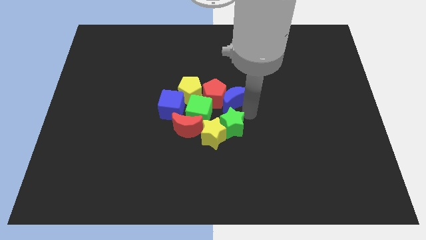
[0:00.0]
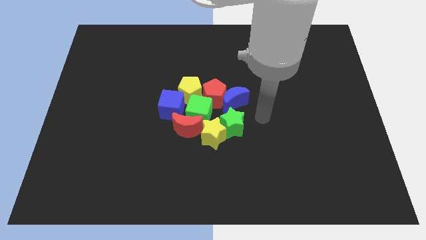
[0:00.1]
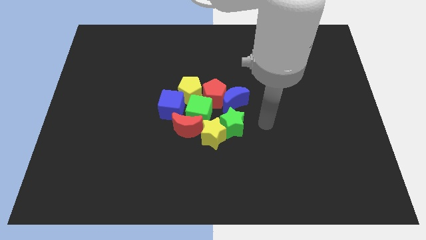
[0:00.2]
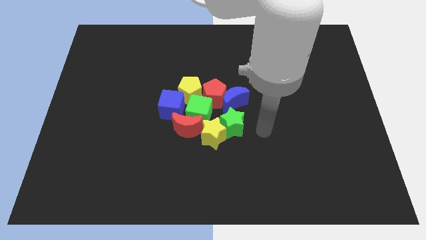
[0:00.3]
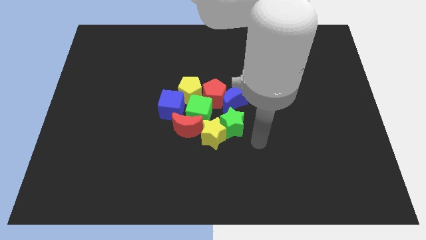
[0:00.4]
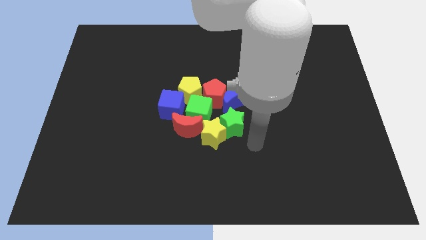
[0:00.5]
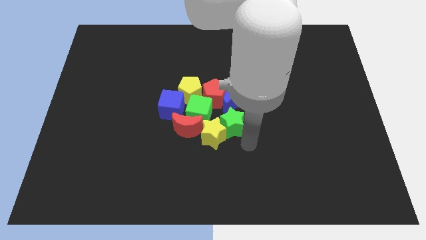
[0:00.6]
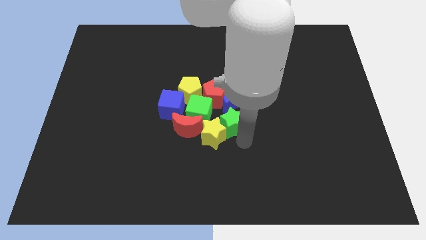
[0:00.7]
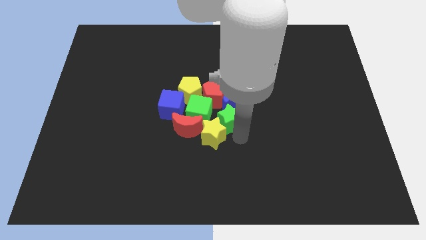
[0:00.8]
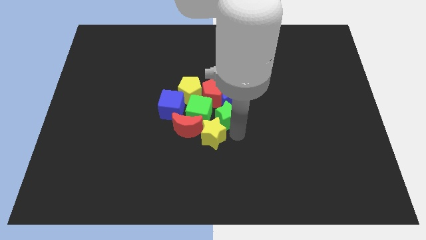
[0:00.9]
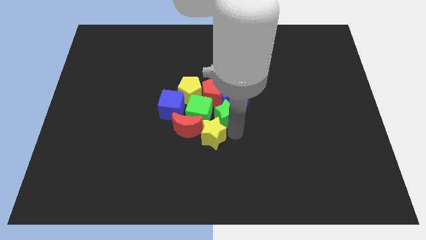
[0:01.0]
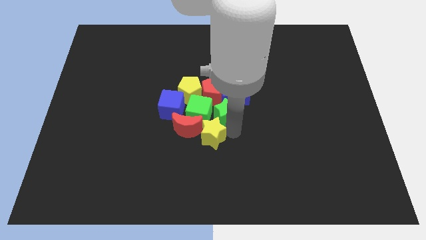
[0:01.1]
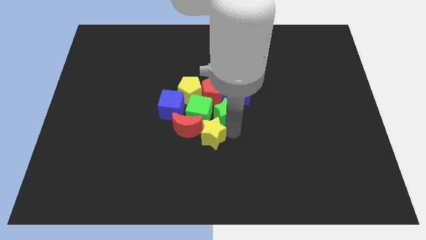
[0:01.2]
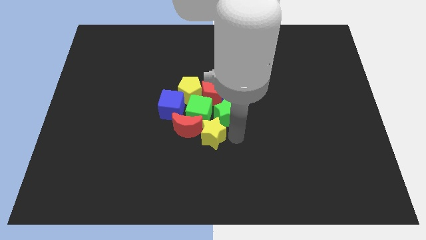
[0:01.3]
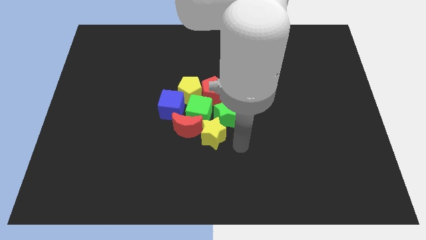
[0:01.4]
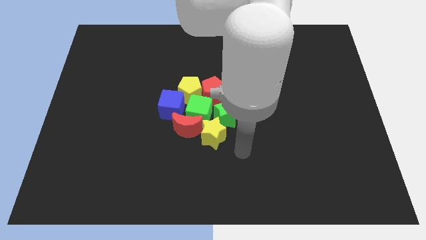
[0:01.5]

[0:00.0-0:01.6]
move green star to the right of green cube

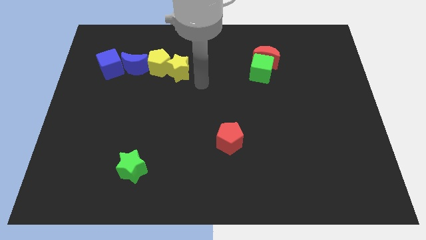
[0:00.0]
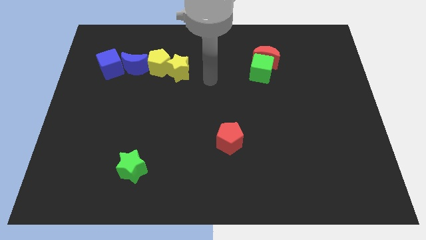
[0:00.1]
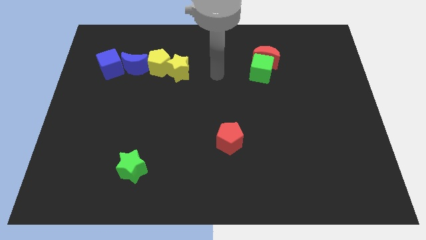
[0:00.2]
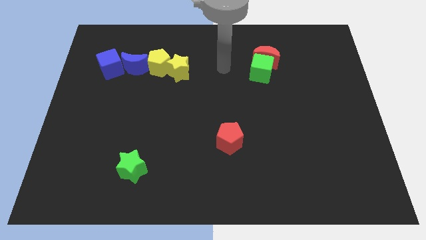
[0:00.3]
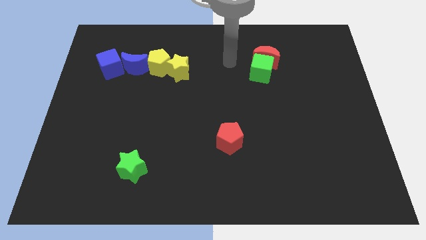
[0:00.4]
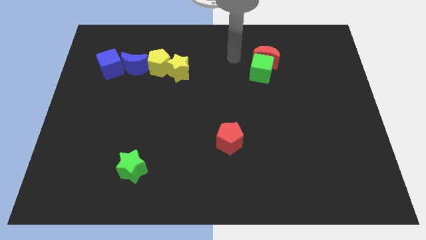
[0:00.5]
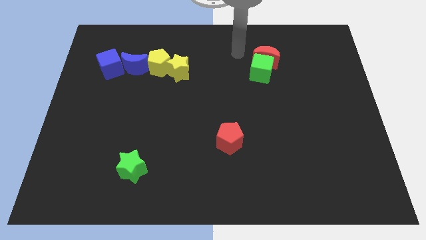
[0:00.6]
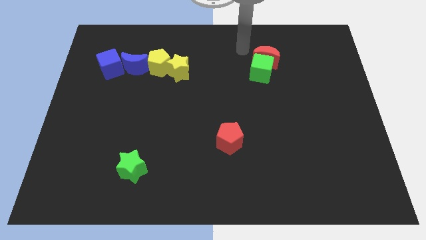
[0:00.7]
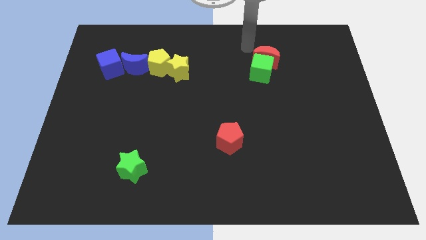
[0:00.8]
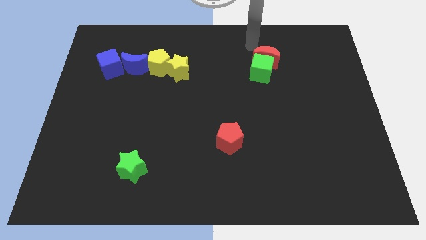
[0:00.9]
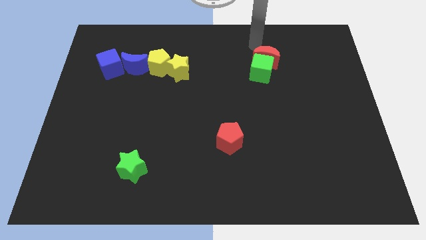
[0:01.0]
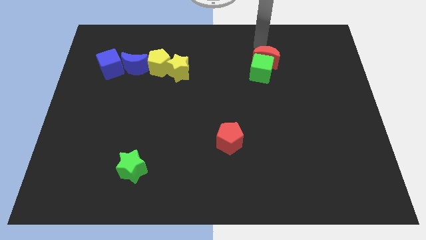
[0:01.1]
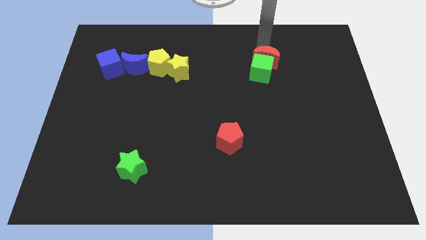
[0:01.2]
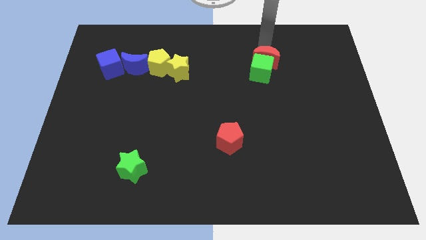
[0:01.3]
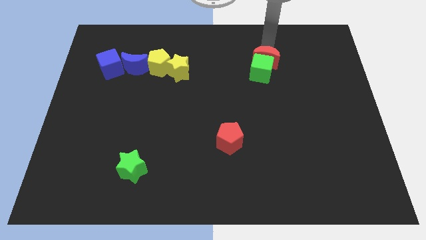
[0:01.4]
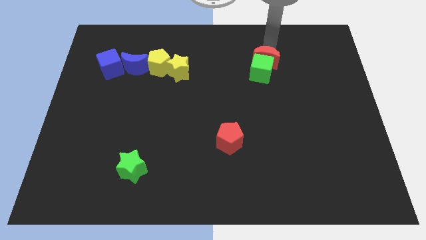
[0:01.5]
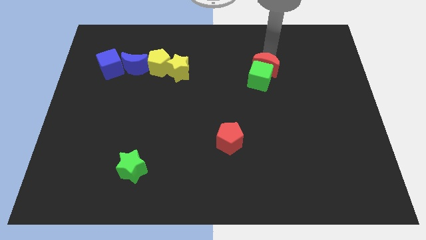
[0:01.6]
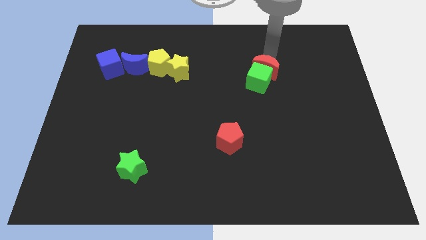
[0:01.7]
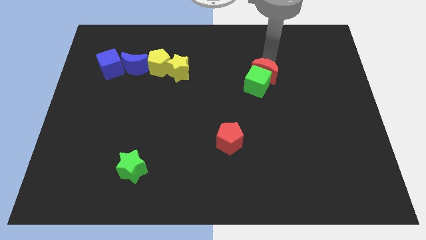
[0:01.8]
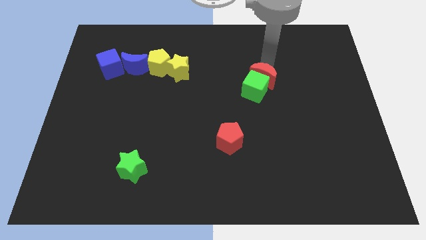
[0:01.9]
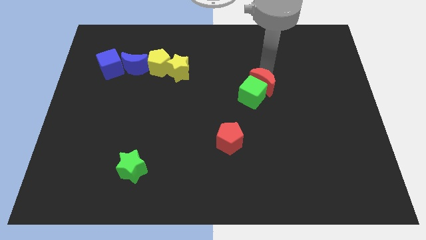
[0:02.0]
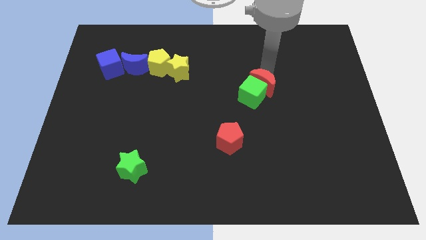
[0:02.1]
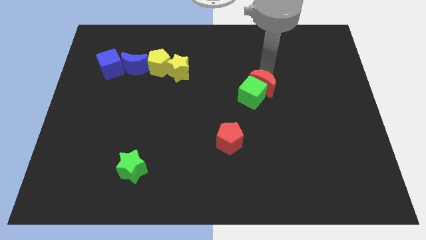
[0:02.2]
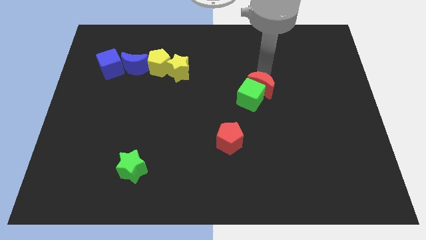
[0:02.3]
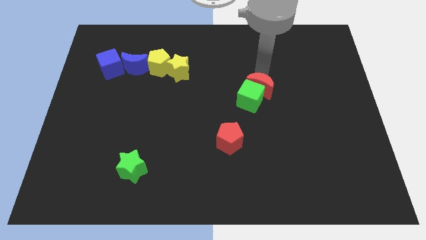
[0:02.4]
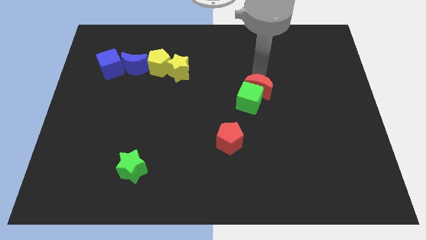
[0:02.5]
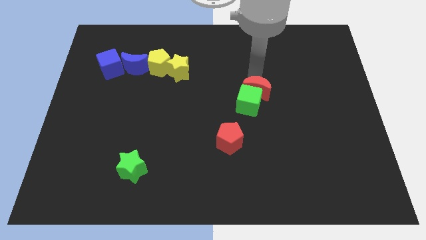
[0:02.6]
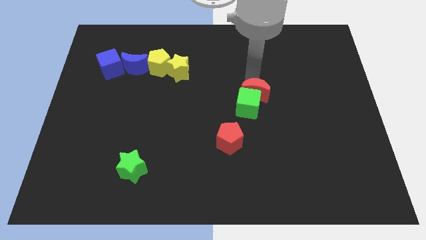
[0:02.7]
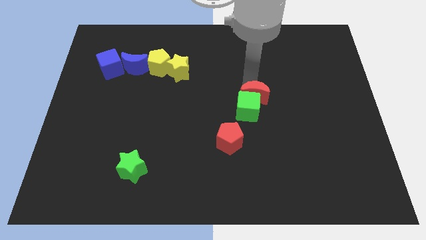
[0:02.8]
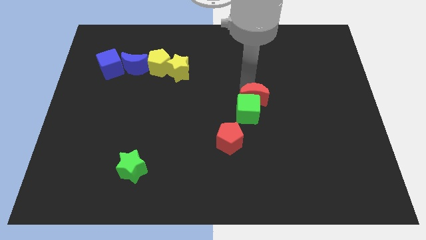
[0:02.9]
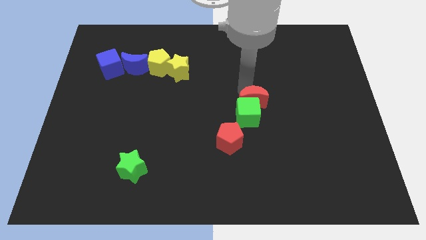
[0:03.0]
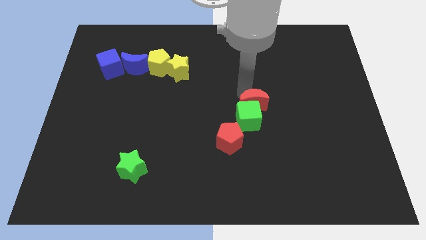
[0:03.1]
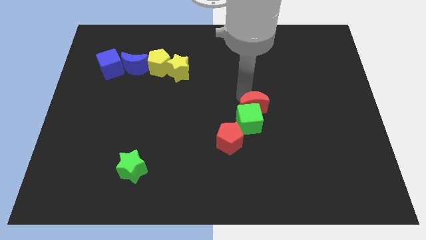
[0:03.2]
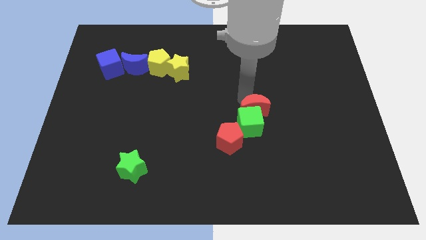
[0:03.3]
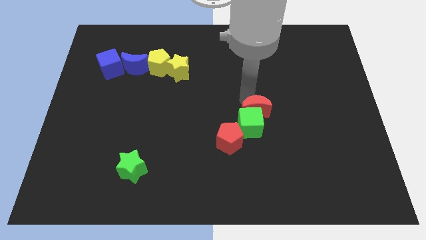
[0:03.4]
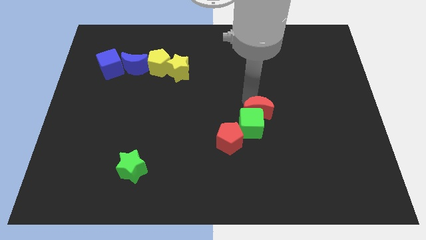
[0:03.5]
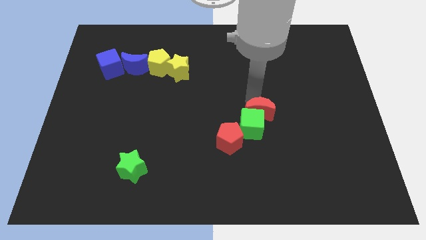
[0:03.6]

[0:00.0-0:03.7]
move the green cube and the red moon to the top right side of the red pentagon

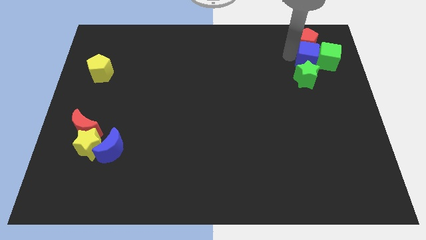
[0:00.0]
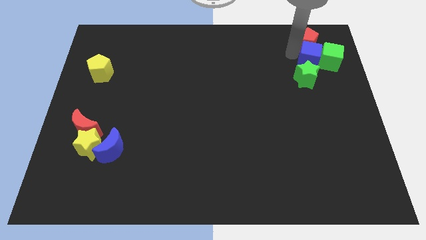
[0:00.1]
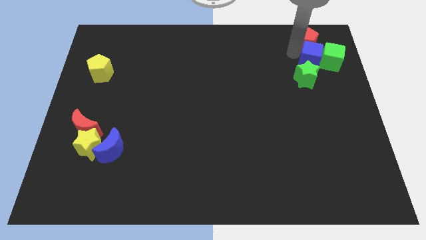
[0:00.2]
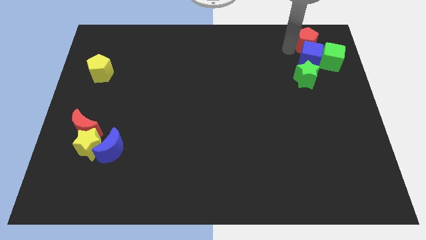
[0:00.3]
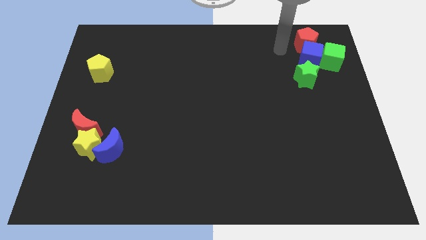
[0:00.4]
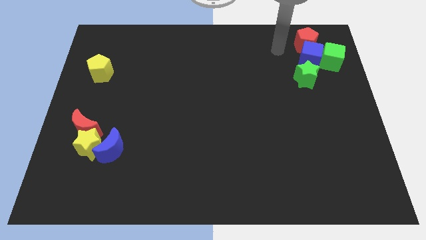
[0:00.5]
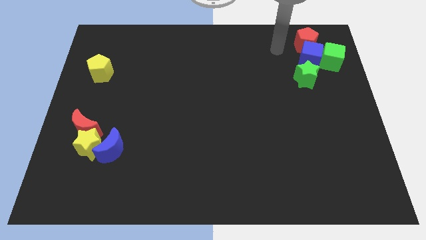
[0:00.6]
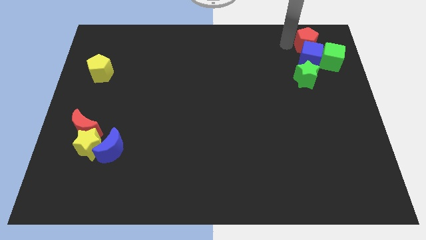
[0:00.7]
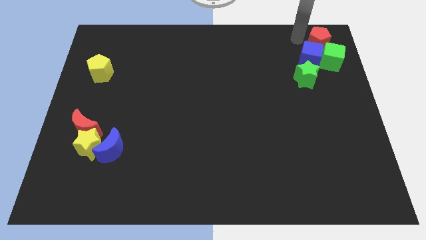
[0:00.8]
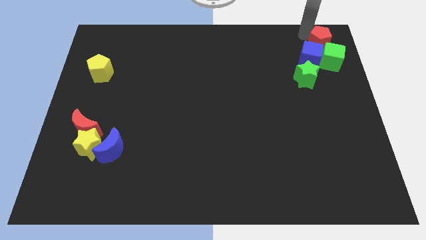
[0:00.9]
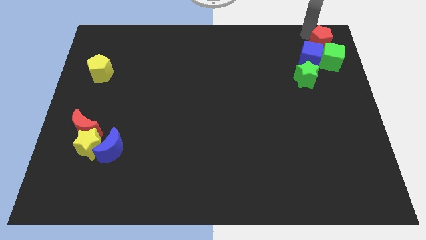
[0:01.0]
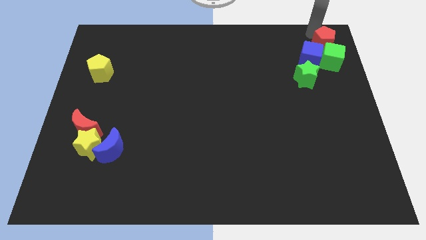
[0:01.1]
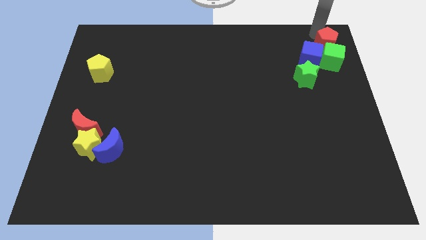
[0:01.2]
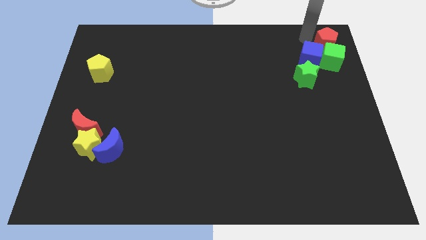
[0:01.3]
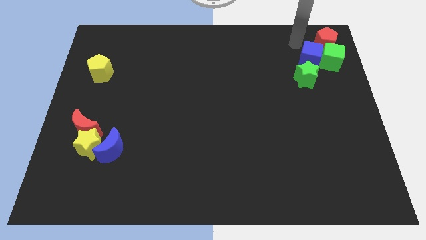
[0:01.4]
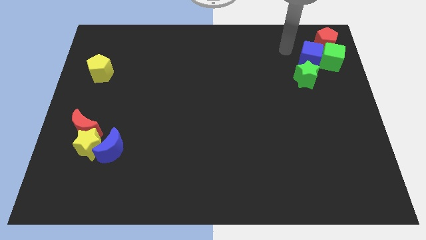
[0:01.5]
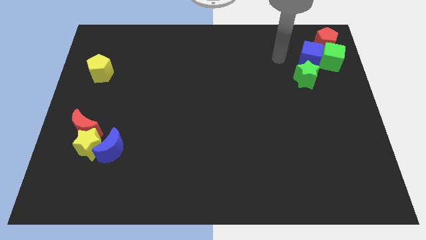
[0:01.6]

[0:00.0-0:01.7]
place red pentagon to the top right center of the board

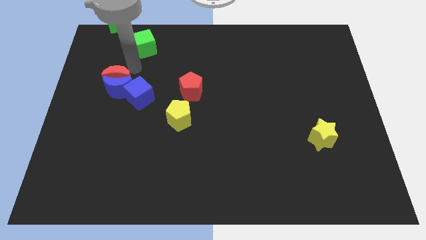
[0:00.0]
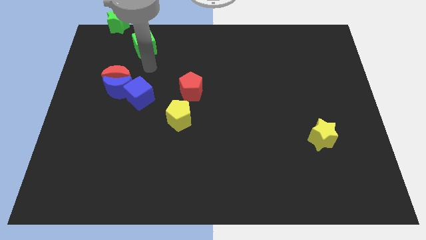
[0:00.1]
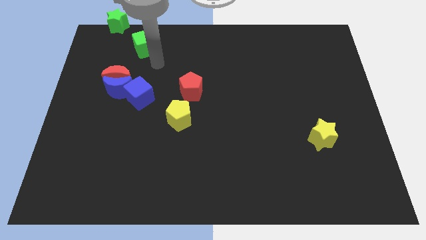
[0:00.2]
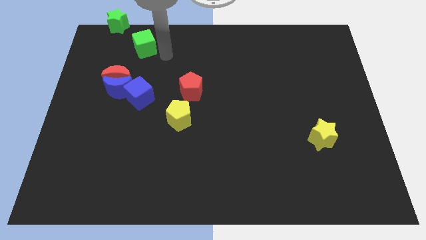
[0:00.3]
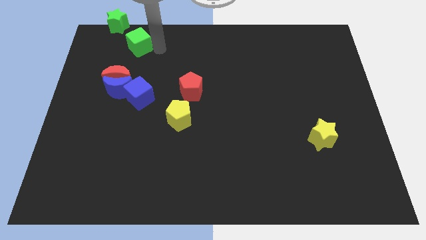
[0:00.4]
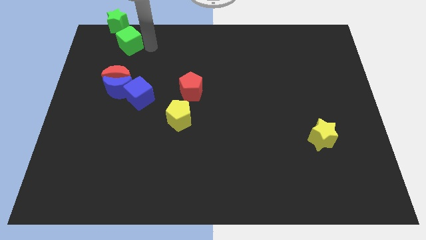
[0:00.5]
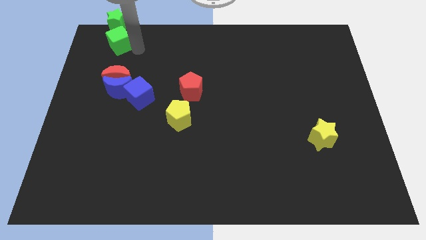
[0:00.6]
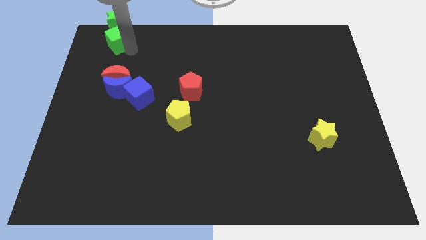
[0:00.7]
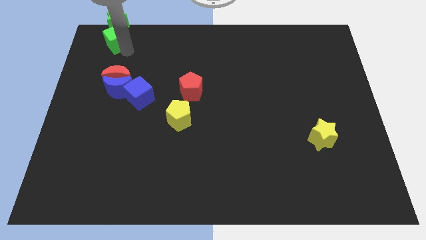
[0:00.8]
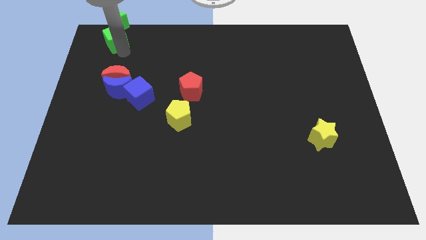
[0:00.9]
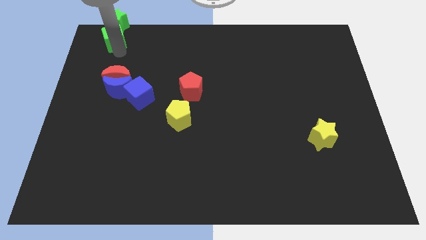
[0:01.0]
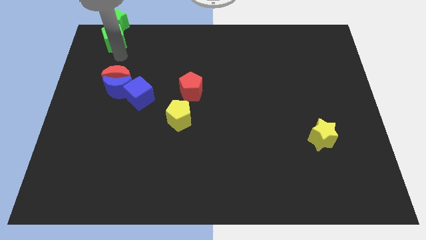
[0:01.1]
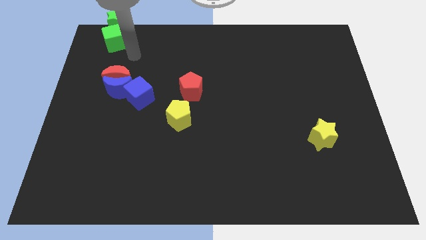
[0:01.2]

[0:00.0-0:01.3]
push green cube below green star

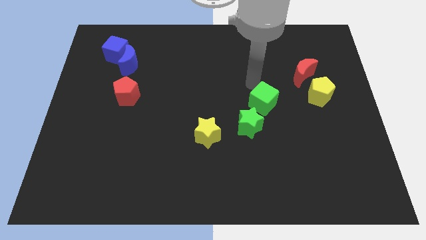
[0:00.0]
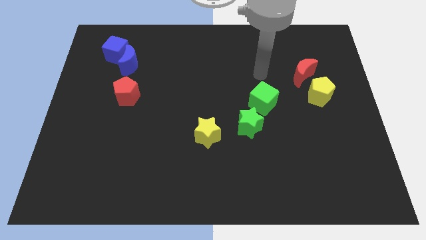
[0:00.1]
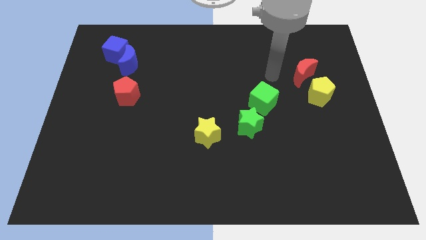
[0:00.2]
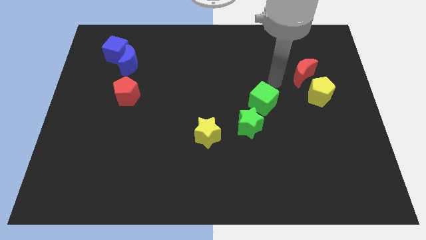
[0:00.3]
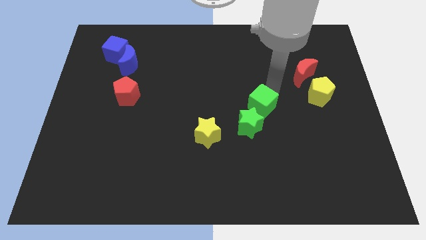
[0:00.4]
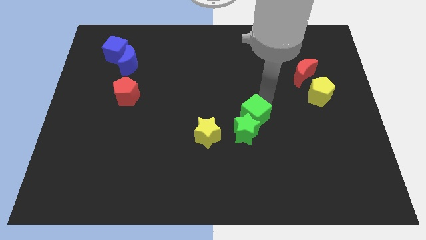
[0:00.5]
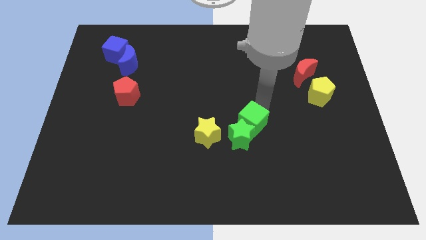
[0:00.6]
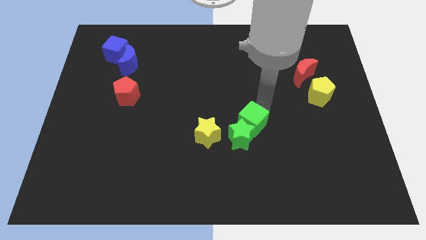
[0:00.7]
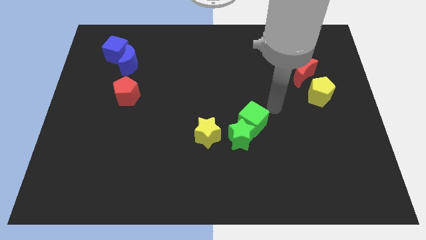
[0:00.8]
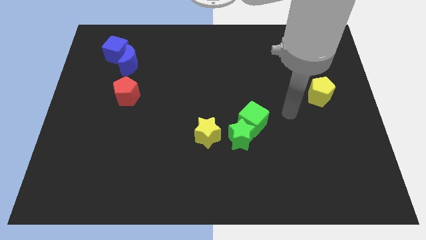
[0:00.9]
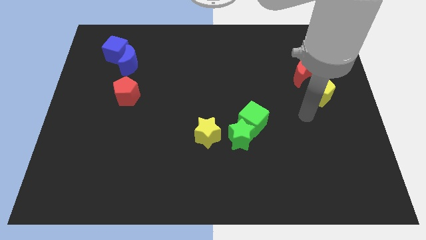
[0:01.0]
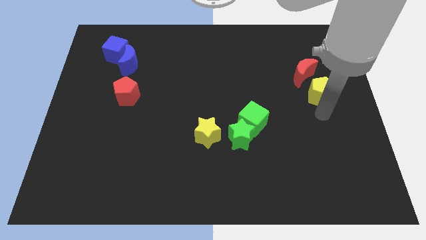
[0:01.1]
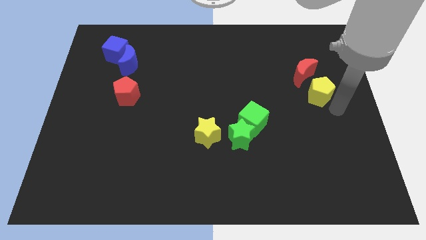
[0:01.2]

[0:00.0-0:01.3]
push the green cube into the green star
